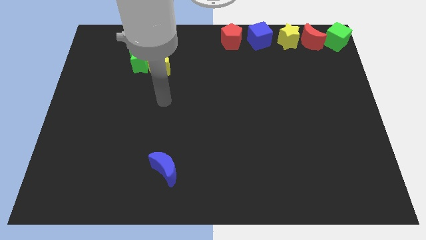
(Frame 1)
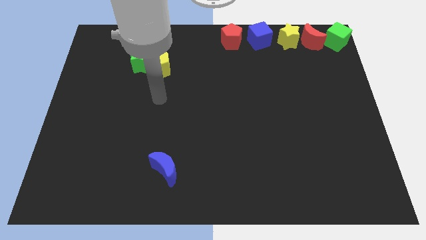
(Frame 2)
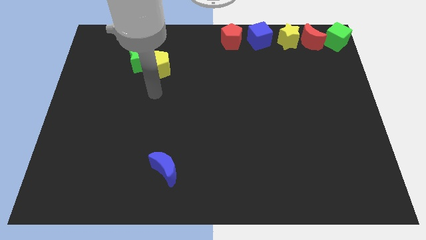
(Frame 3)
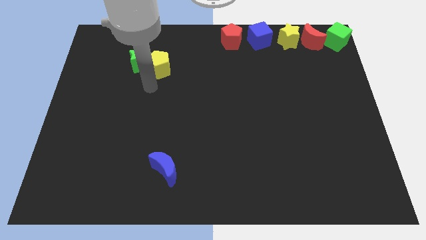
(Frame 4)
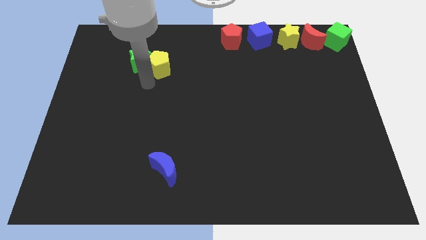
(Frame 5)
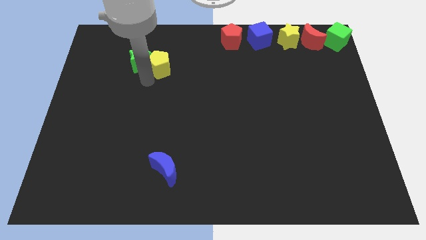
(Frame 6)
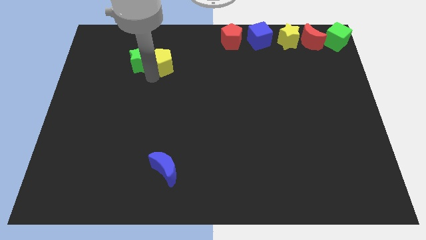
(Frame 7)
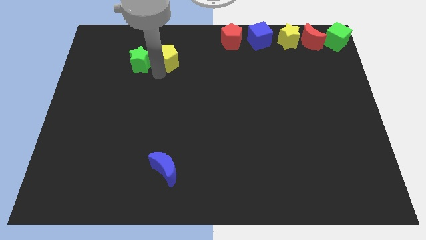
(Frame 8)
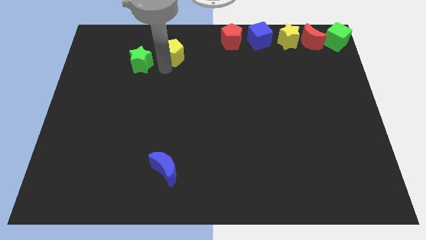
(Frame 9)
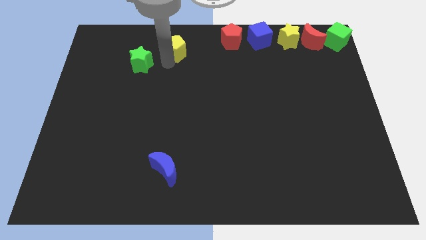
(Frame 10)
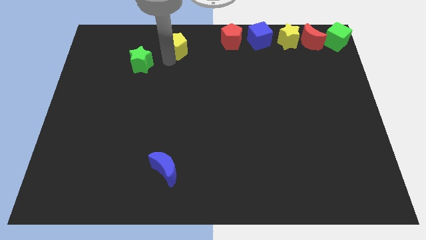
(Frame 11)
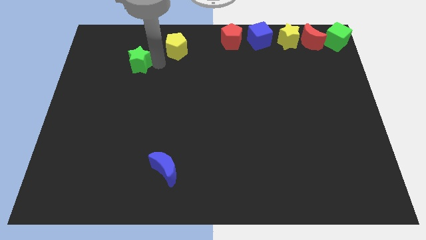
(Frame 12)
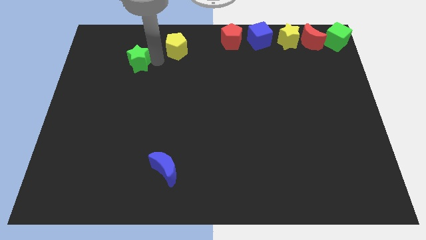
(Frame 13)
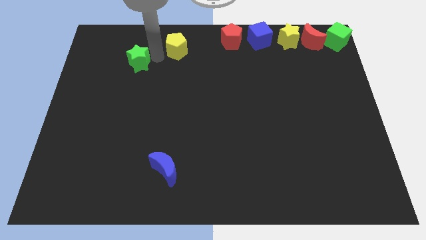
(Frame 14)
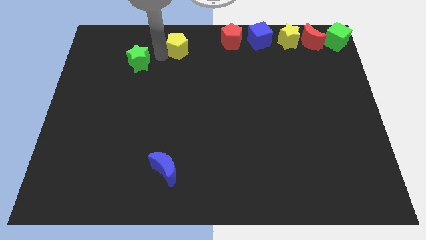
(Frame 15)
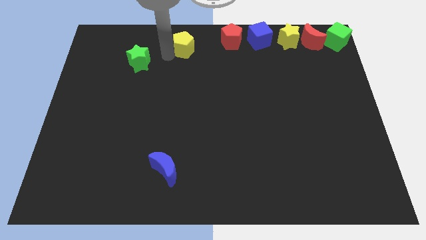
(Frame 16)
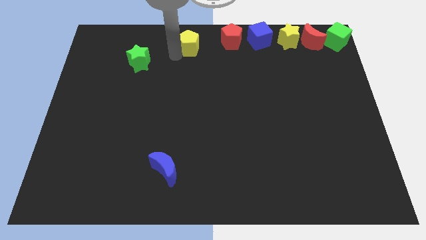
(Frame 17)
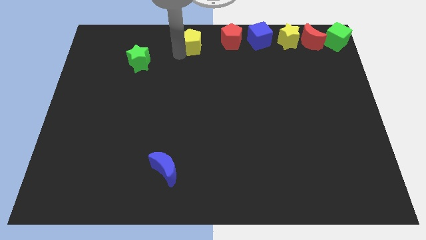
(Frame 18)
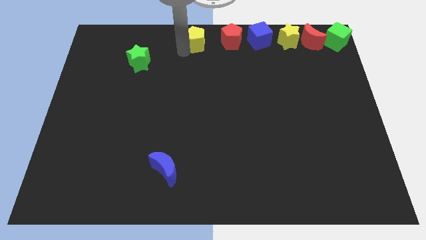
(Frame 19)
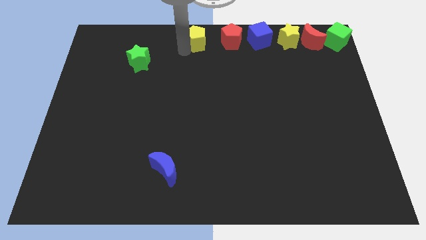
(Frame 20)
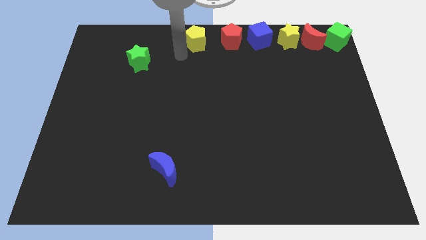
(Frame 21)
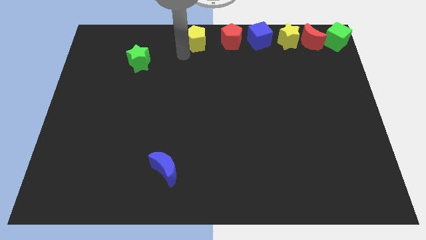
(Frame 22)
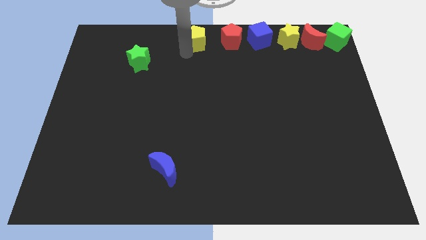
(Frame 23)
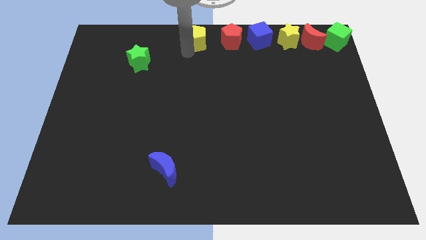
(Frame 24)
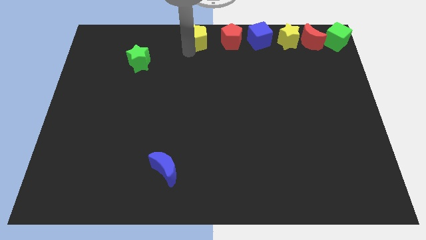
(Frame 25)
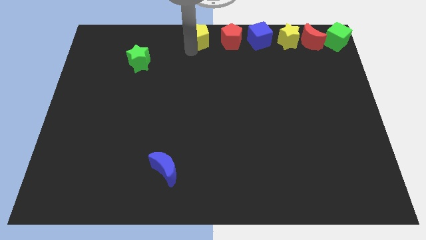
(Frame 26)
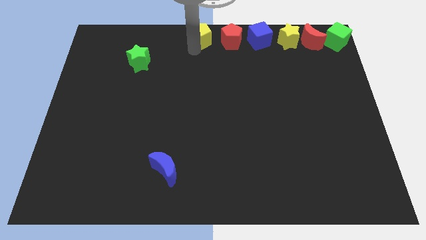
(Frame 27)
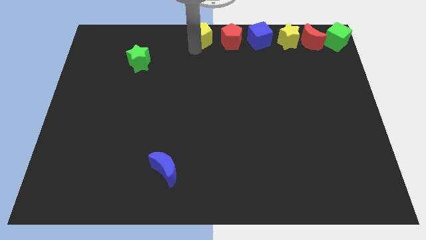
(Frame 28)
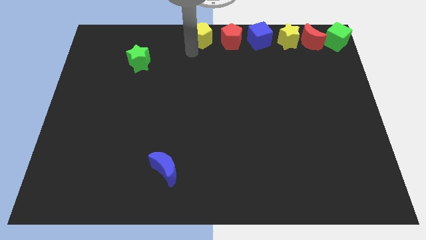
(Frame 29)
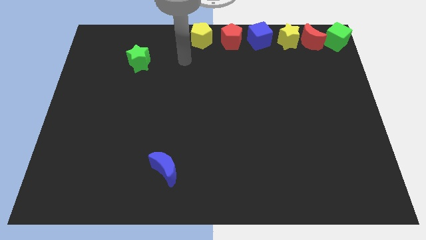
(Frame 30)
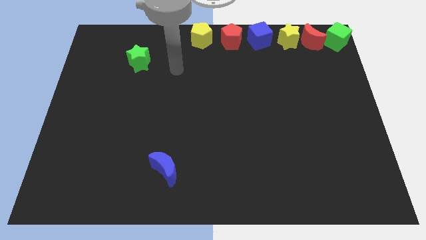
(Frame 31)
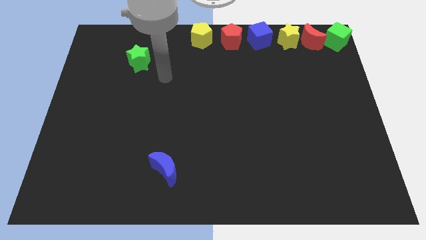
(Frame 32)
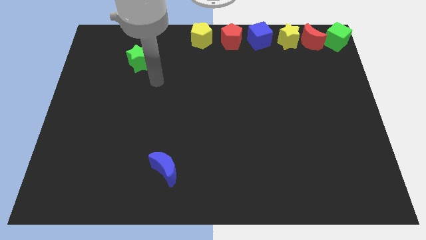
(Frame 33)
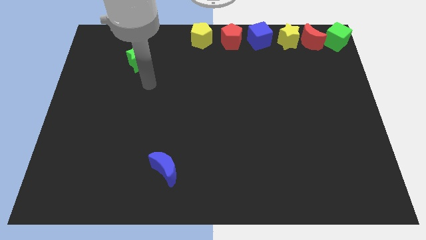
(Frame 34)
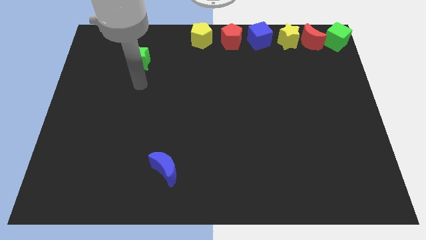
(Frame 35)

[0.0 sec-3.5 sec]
push the yellow pentagon left of the red pentagon

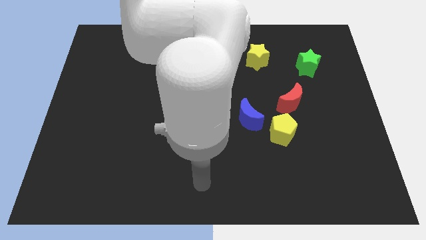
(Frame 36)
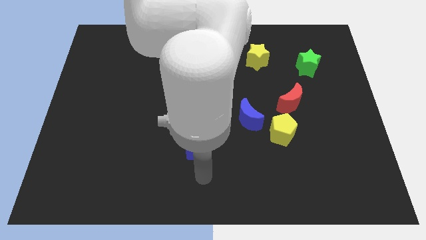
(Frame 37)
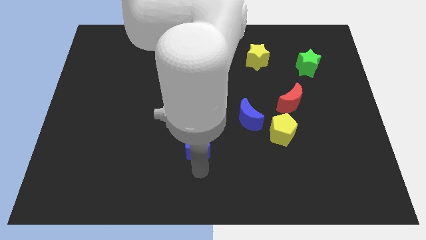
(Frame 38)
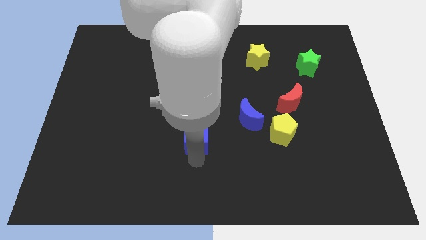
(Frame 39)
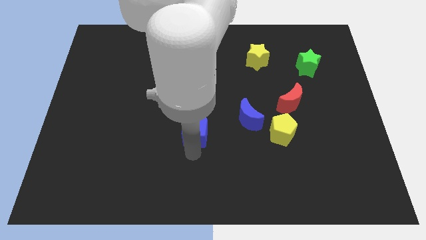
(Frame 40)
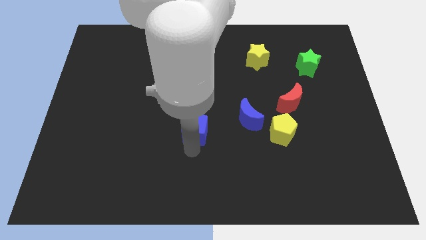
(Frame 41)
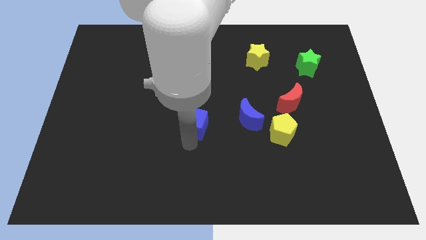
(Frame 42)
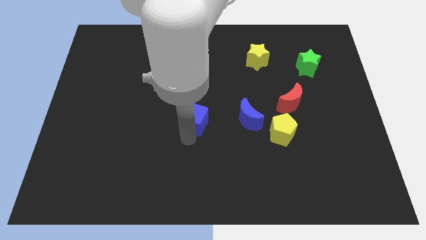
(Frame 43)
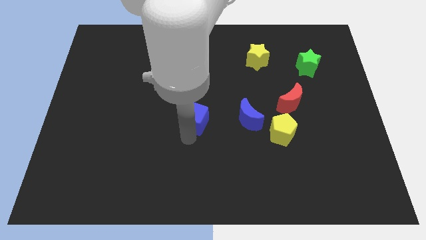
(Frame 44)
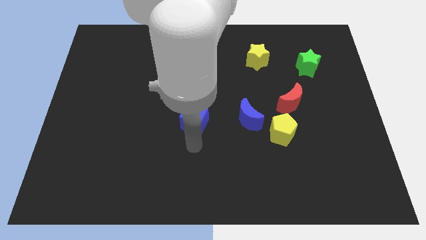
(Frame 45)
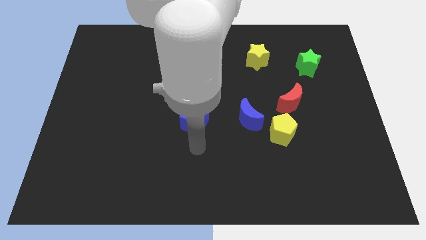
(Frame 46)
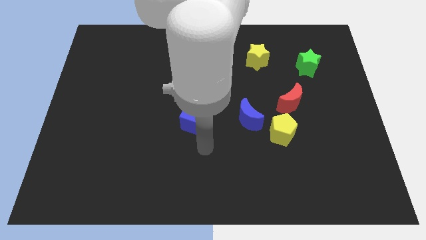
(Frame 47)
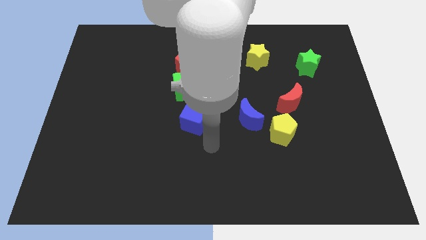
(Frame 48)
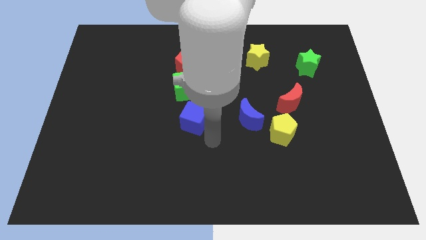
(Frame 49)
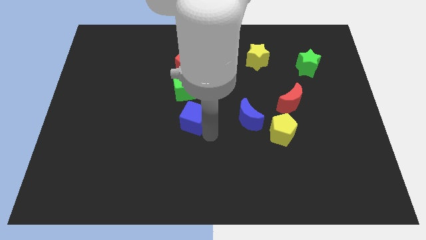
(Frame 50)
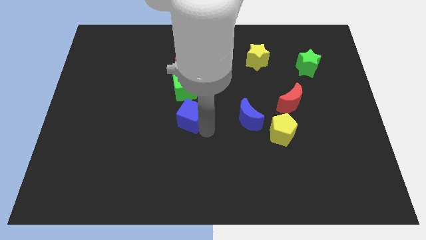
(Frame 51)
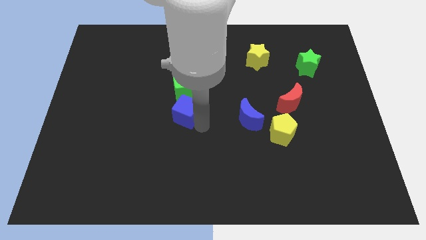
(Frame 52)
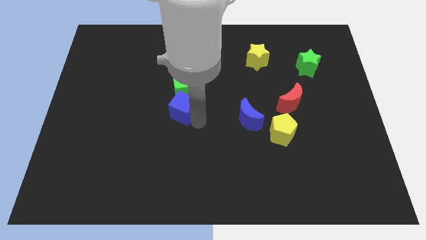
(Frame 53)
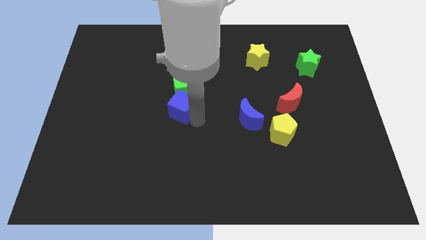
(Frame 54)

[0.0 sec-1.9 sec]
move the blue cube below the green cube

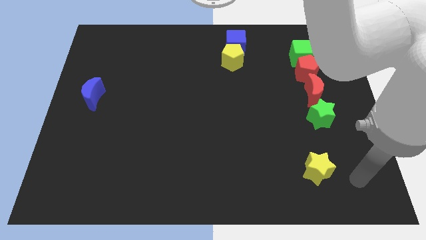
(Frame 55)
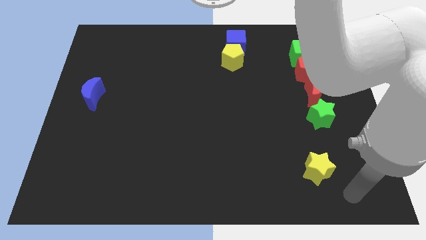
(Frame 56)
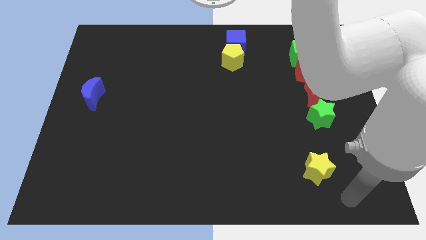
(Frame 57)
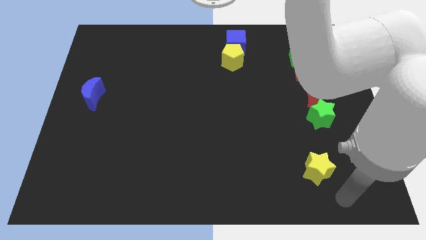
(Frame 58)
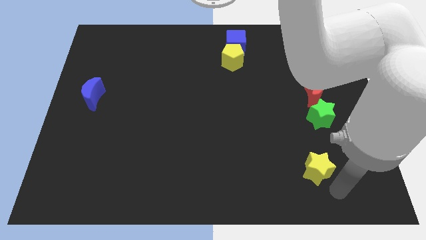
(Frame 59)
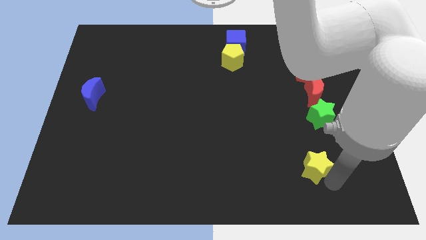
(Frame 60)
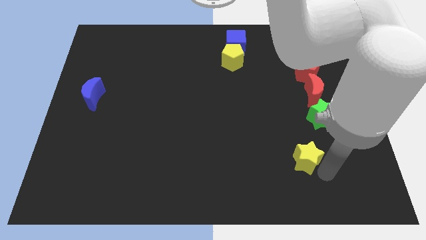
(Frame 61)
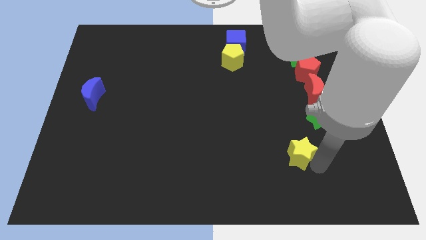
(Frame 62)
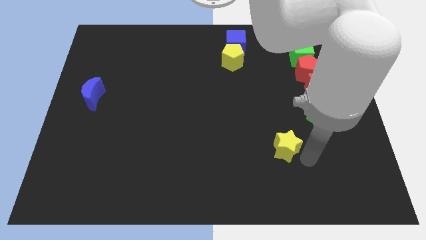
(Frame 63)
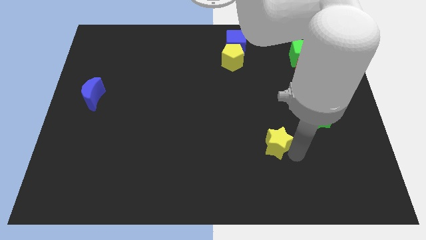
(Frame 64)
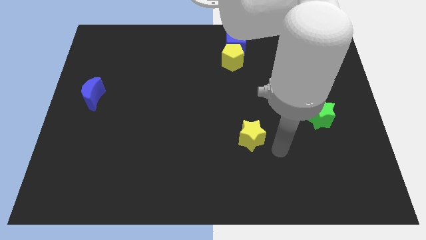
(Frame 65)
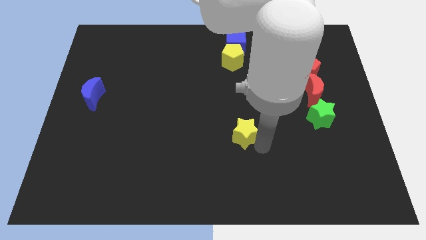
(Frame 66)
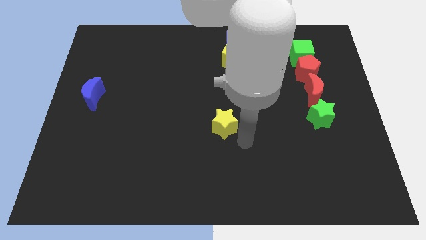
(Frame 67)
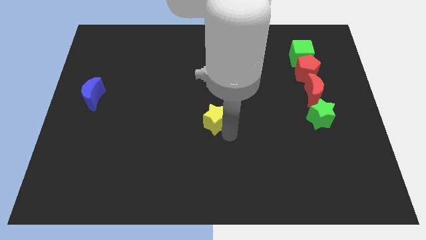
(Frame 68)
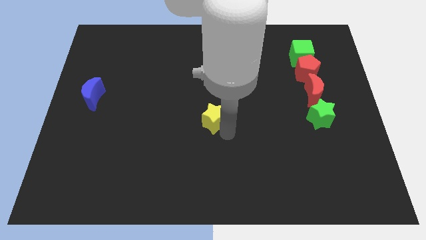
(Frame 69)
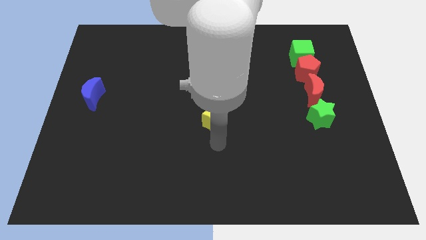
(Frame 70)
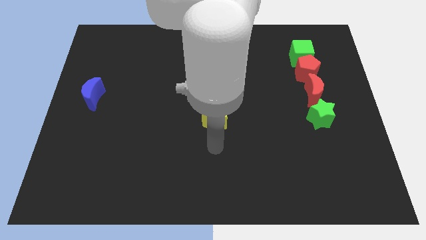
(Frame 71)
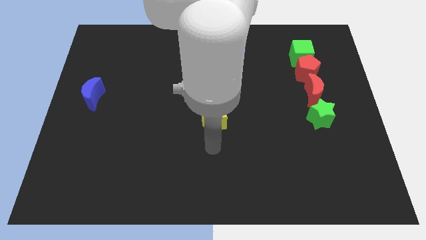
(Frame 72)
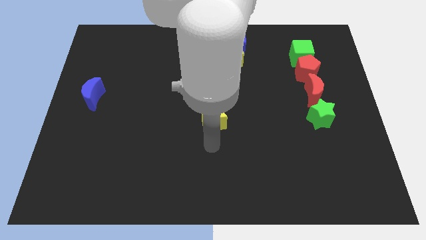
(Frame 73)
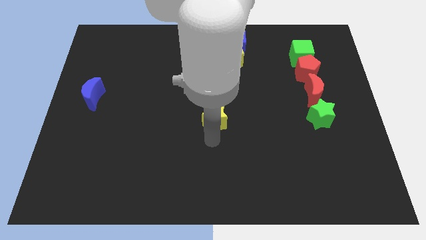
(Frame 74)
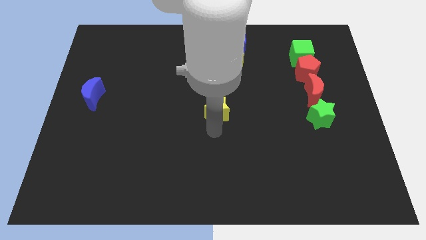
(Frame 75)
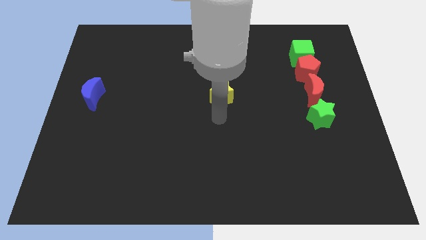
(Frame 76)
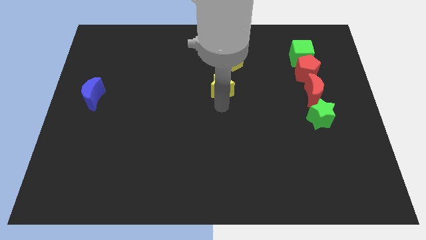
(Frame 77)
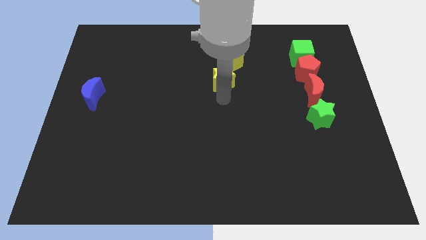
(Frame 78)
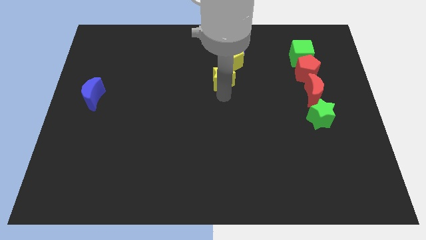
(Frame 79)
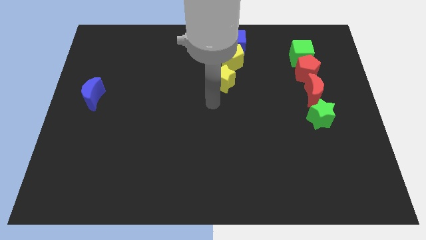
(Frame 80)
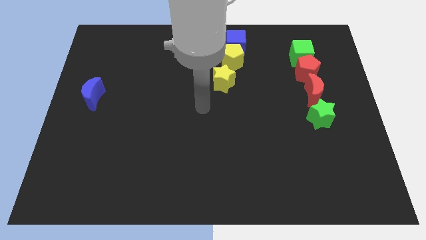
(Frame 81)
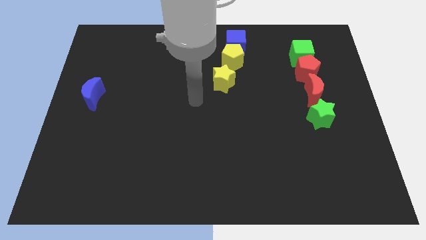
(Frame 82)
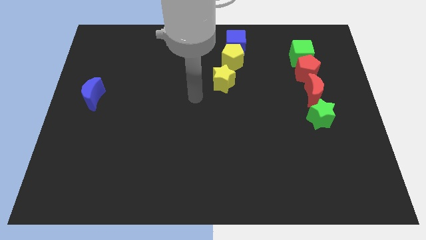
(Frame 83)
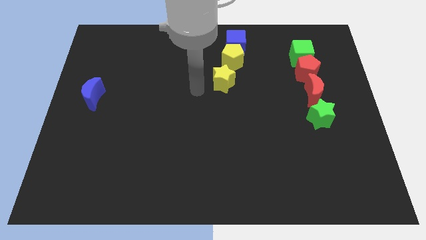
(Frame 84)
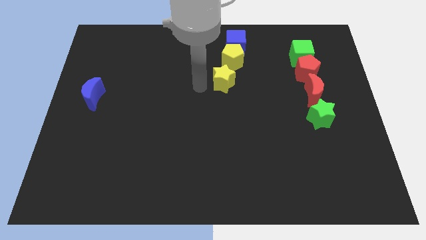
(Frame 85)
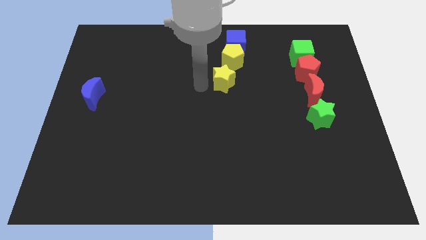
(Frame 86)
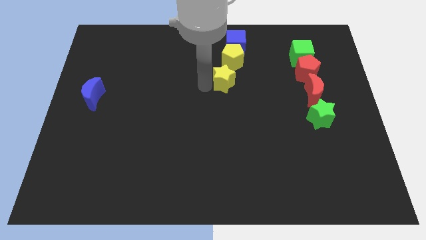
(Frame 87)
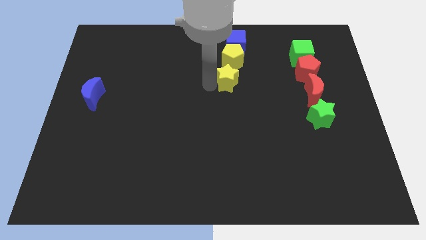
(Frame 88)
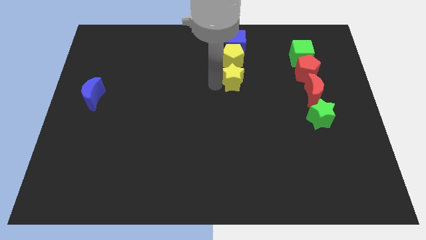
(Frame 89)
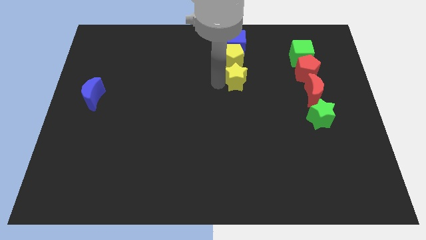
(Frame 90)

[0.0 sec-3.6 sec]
push the yellow star at the bottom side of the yellow pentagon
